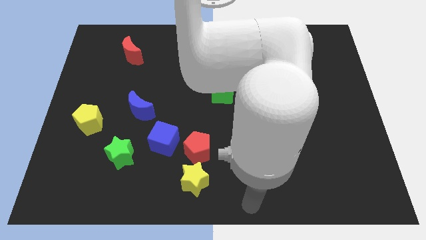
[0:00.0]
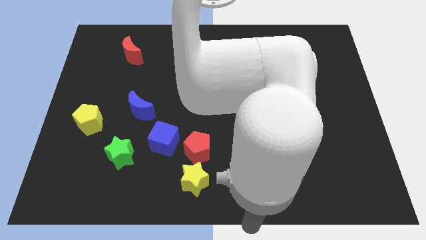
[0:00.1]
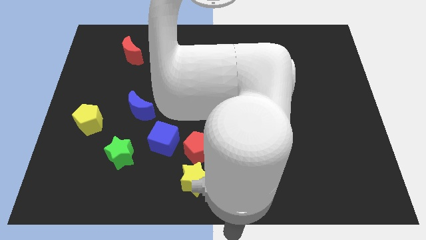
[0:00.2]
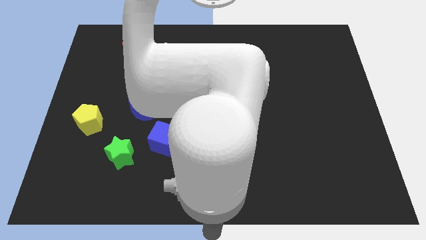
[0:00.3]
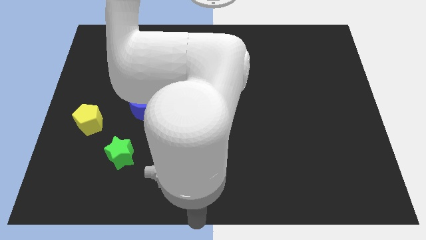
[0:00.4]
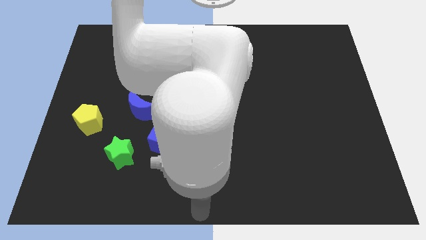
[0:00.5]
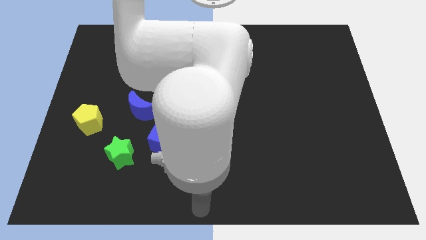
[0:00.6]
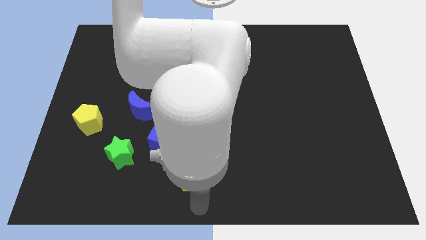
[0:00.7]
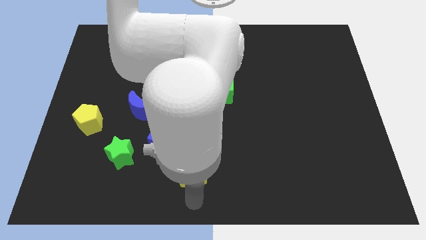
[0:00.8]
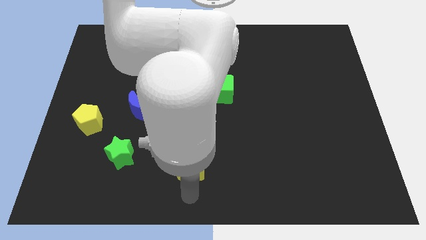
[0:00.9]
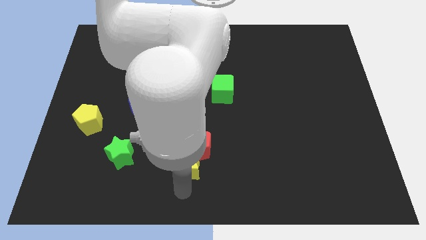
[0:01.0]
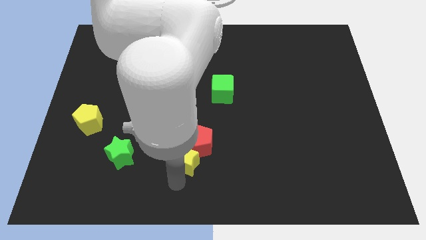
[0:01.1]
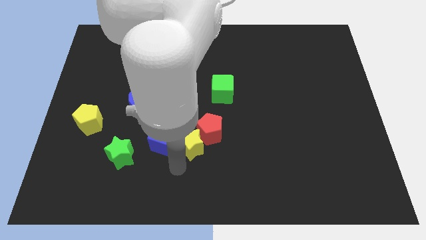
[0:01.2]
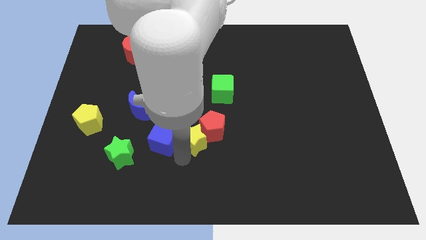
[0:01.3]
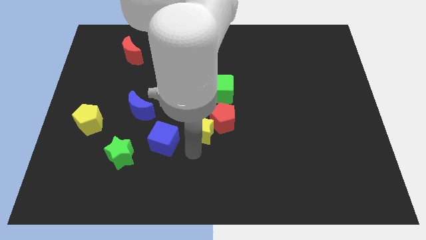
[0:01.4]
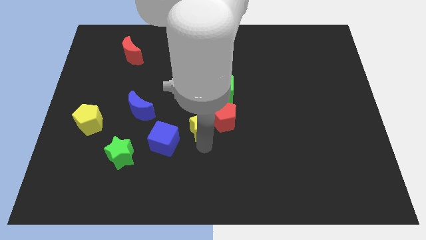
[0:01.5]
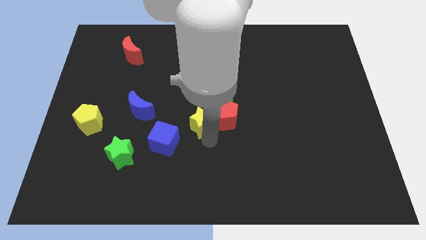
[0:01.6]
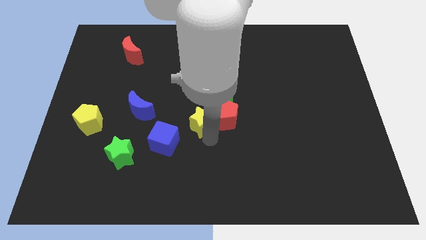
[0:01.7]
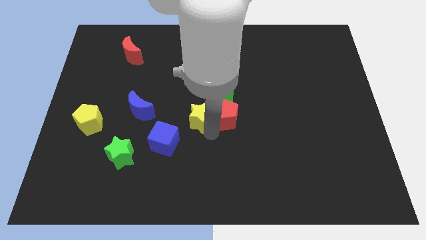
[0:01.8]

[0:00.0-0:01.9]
push the yellow star into the red pentagon

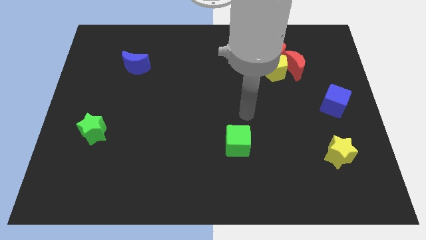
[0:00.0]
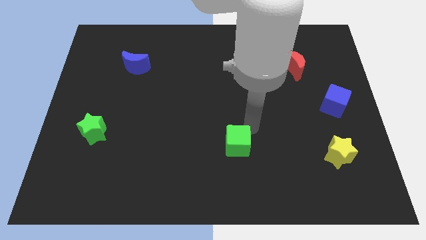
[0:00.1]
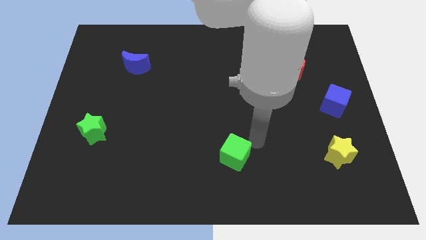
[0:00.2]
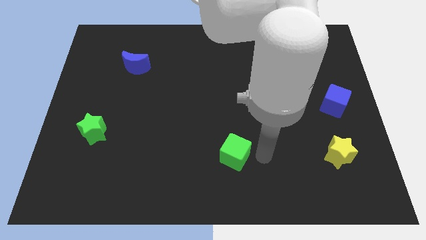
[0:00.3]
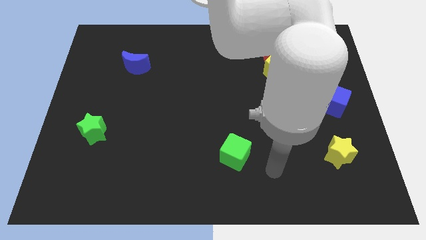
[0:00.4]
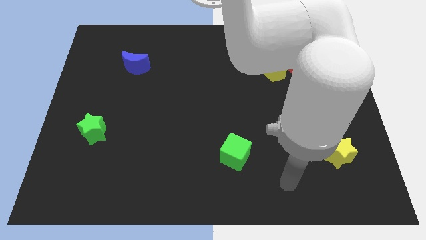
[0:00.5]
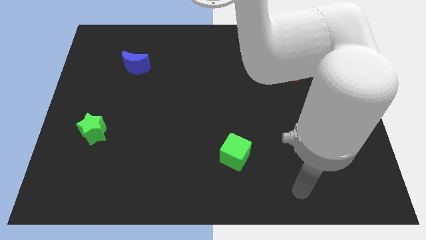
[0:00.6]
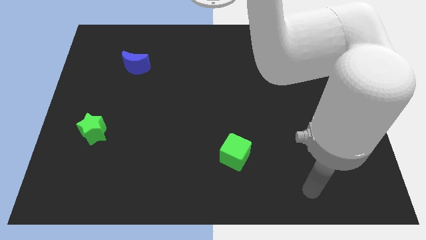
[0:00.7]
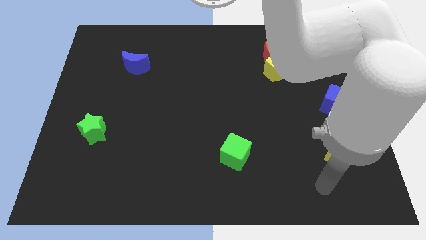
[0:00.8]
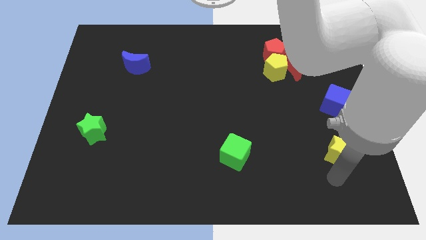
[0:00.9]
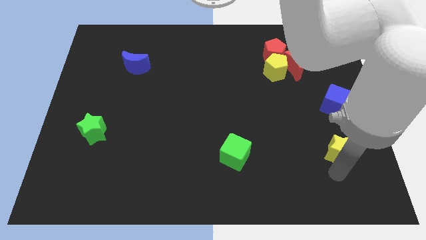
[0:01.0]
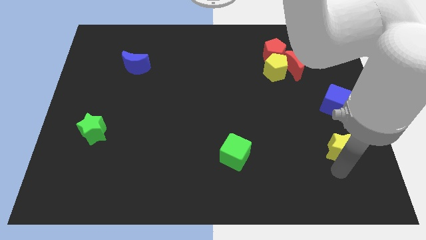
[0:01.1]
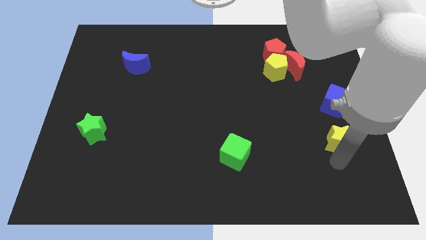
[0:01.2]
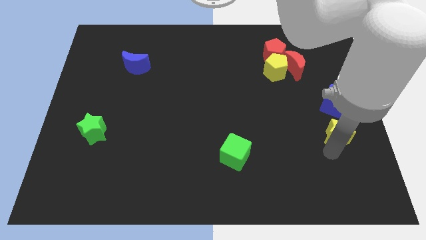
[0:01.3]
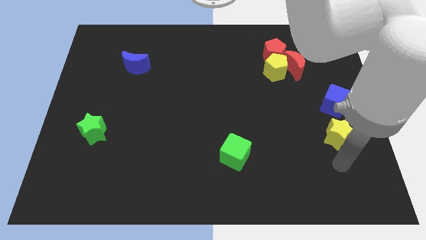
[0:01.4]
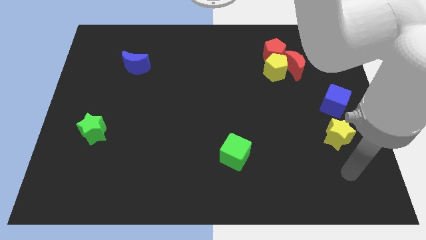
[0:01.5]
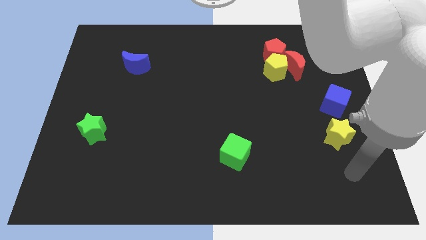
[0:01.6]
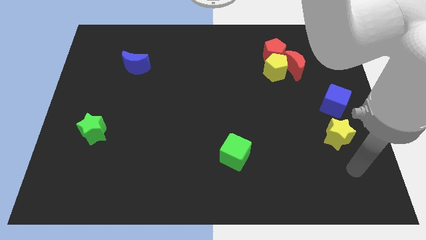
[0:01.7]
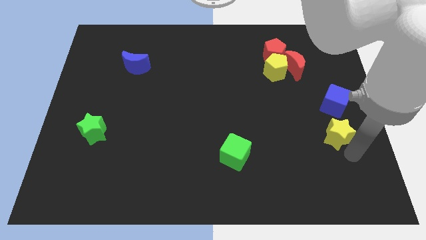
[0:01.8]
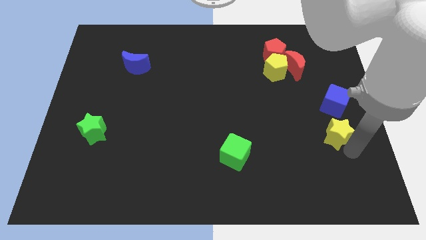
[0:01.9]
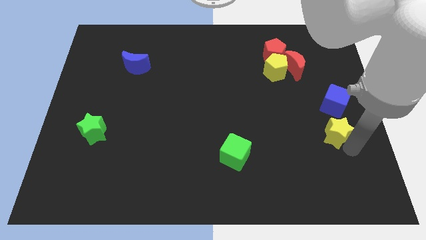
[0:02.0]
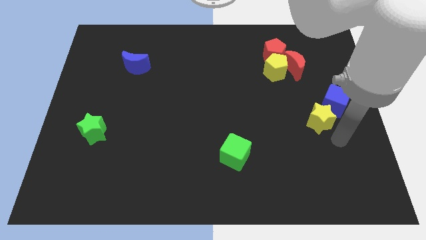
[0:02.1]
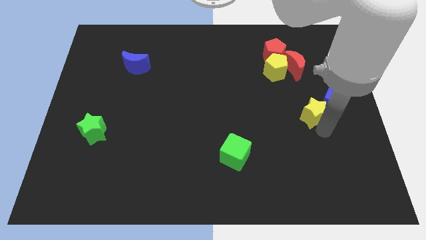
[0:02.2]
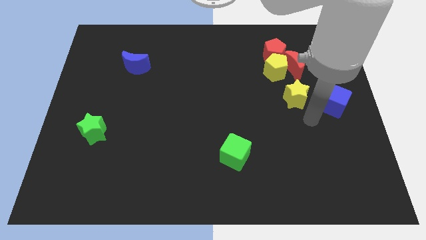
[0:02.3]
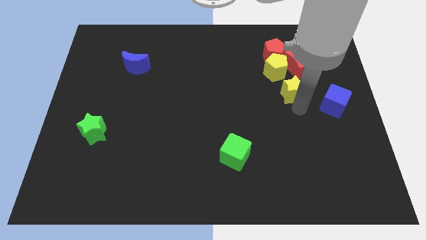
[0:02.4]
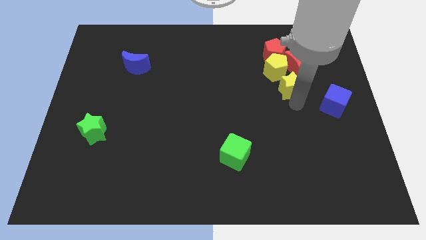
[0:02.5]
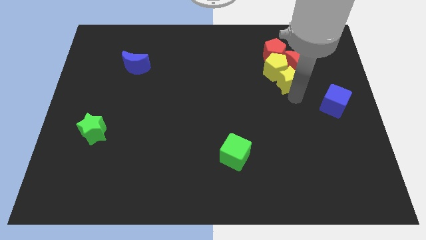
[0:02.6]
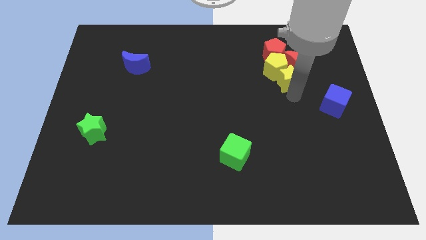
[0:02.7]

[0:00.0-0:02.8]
push the yellow star into the yellow pentagon

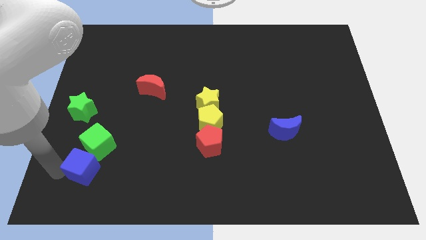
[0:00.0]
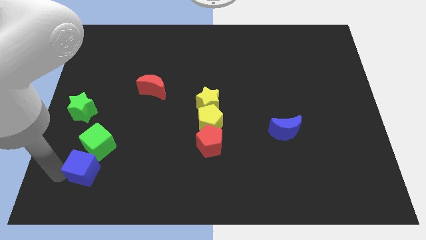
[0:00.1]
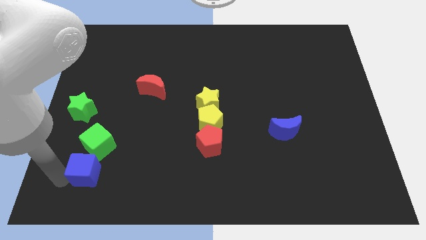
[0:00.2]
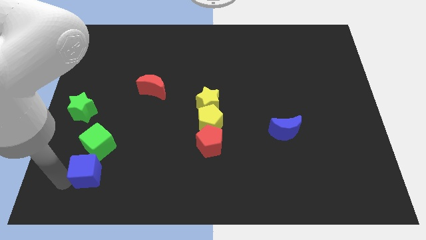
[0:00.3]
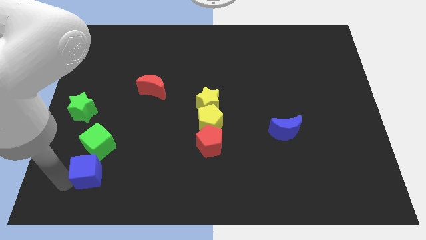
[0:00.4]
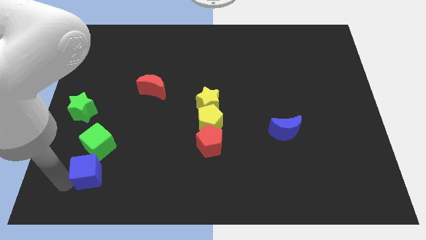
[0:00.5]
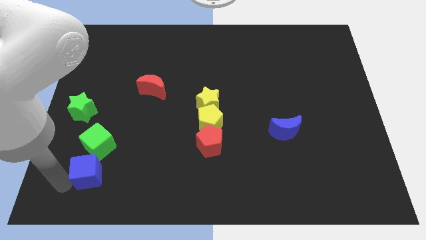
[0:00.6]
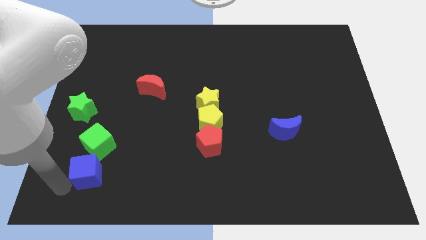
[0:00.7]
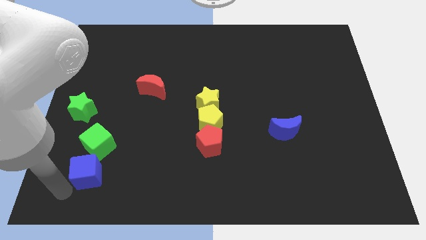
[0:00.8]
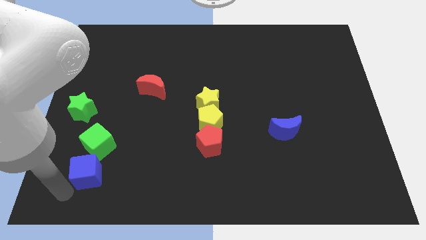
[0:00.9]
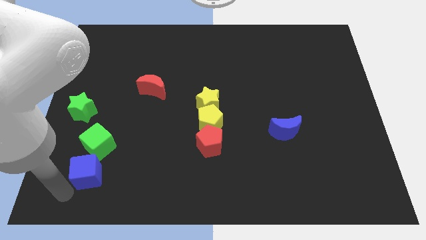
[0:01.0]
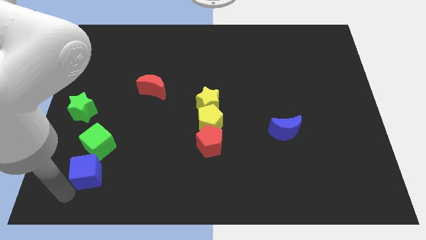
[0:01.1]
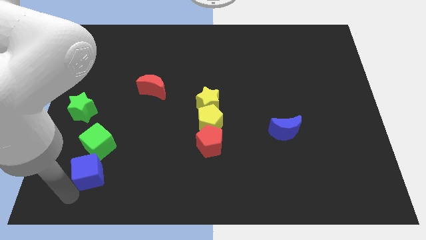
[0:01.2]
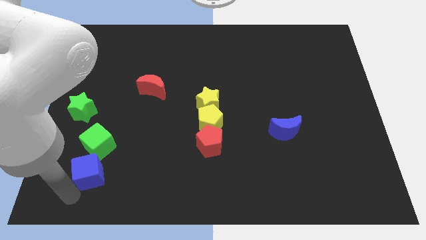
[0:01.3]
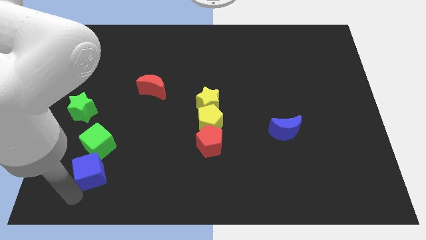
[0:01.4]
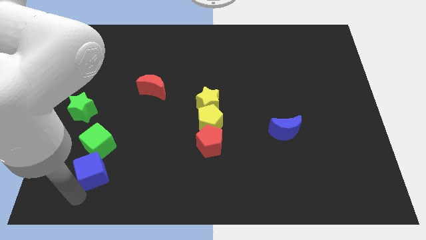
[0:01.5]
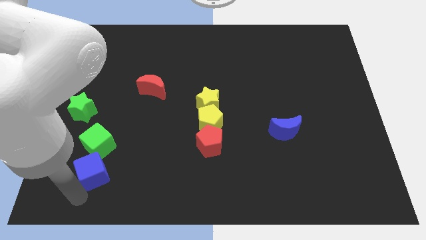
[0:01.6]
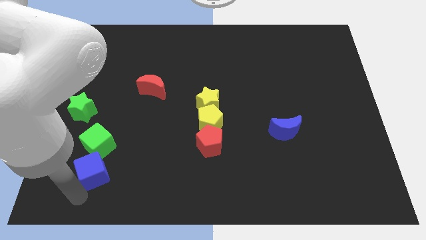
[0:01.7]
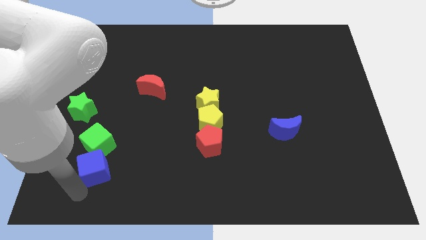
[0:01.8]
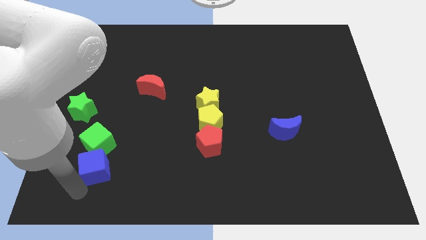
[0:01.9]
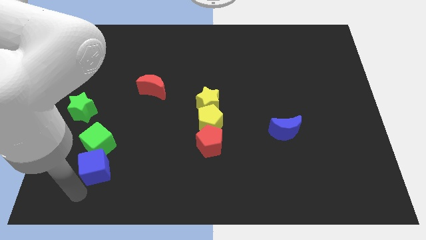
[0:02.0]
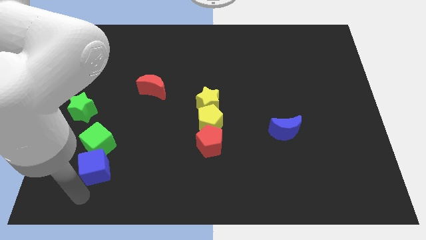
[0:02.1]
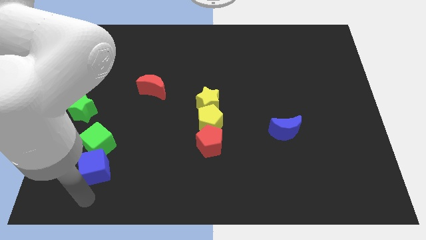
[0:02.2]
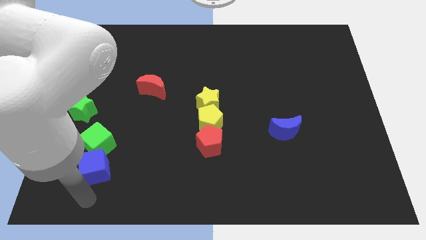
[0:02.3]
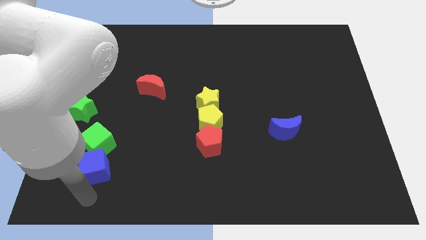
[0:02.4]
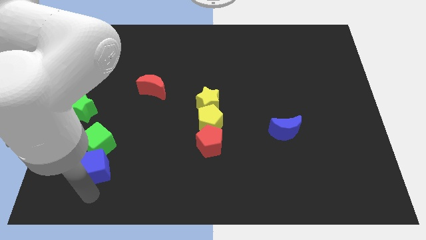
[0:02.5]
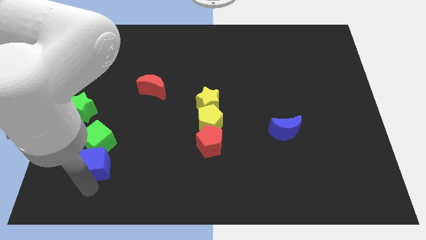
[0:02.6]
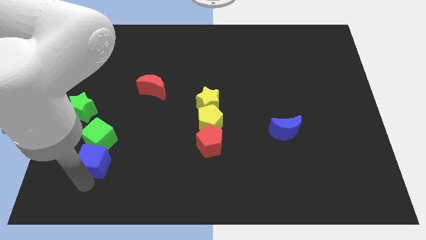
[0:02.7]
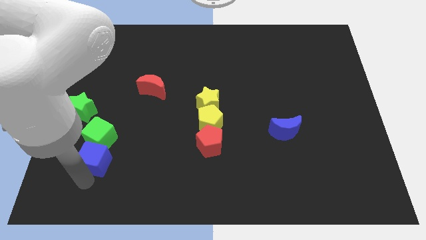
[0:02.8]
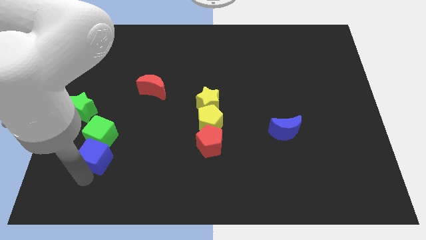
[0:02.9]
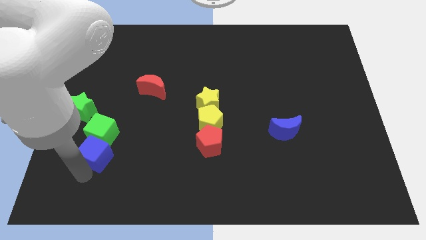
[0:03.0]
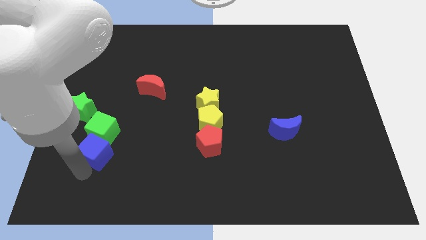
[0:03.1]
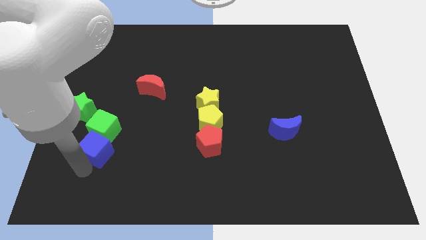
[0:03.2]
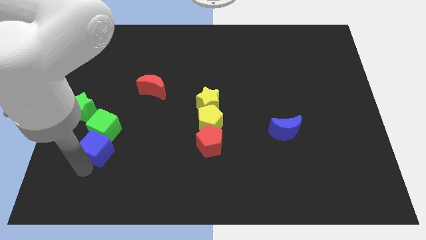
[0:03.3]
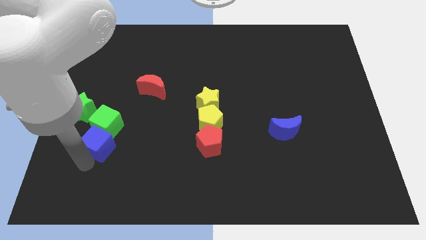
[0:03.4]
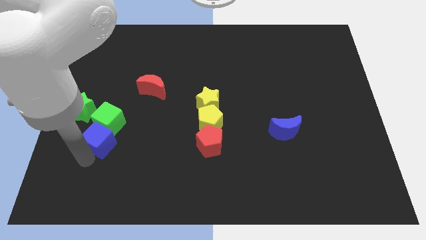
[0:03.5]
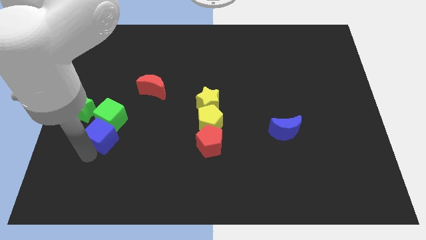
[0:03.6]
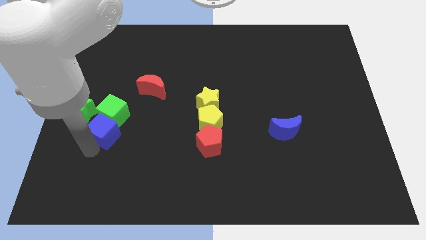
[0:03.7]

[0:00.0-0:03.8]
push the blue cube and green cube to the right side of the green star

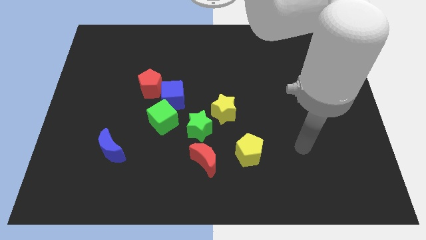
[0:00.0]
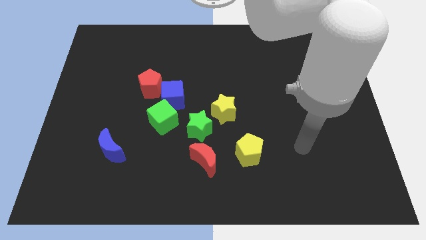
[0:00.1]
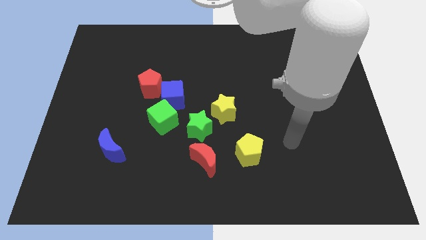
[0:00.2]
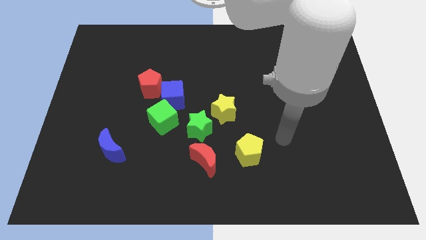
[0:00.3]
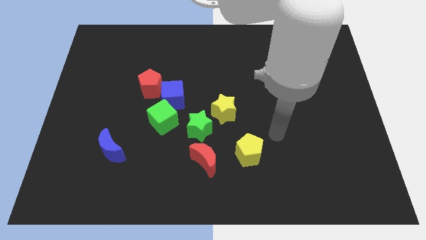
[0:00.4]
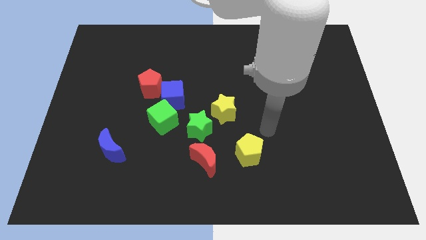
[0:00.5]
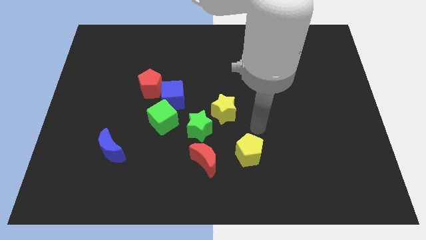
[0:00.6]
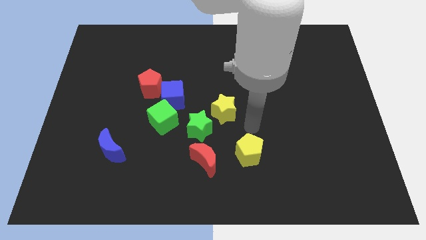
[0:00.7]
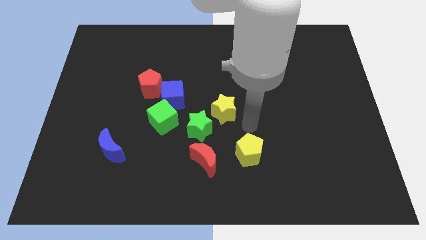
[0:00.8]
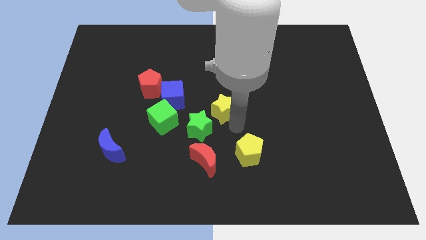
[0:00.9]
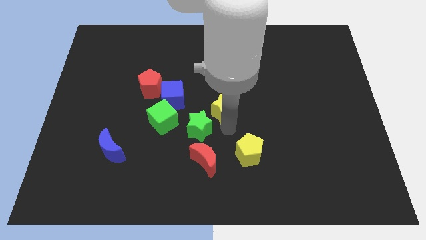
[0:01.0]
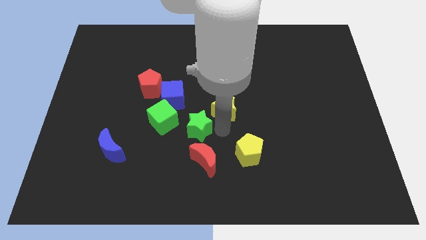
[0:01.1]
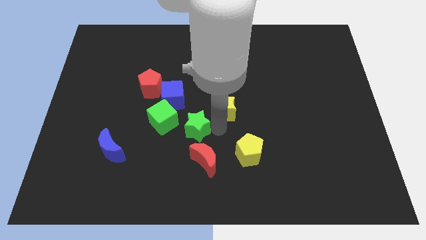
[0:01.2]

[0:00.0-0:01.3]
point your arm at the bottom of the yellow star
